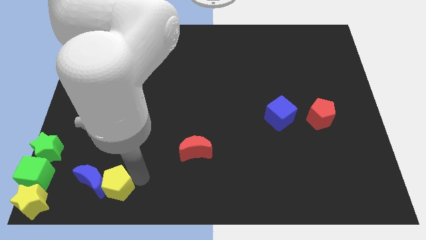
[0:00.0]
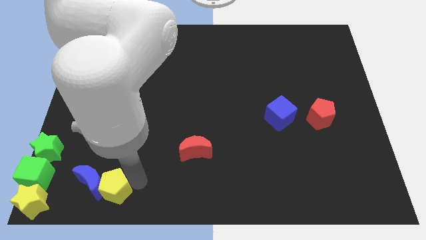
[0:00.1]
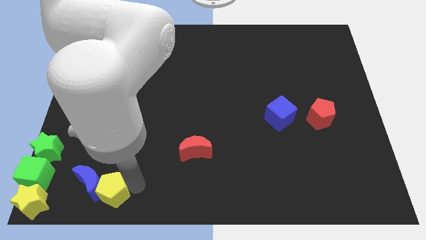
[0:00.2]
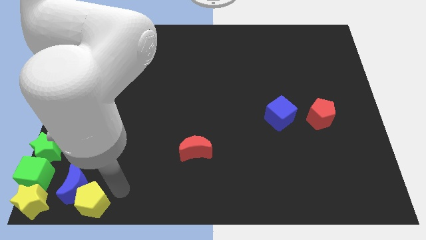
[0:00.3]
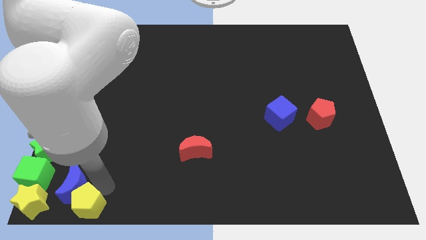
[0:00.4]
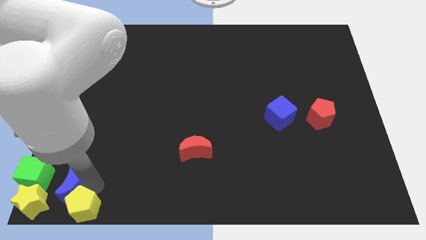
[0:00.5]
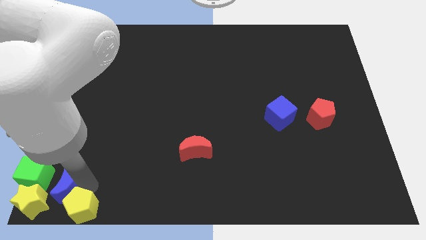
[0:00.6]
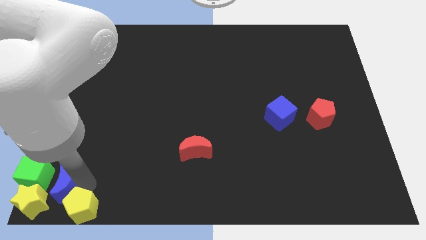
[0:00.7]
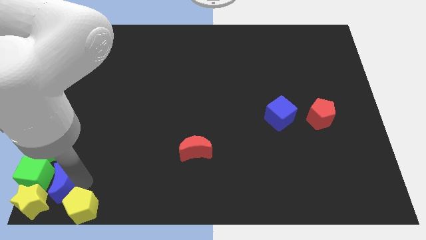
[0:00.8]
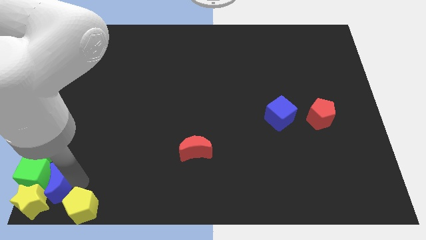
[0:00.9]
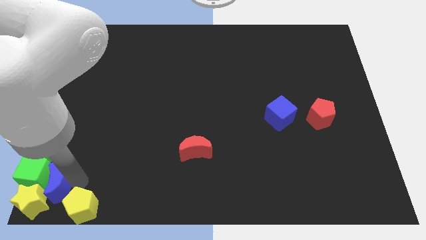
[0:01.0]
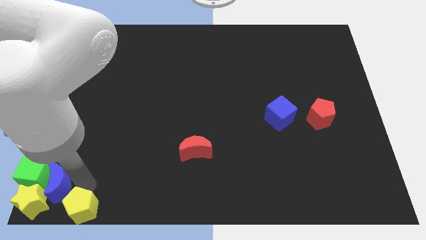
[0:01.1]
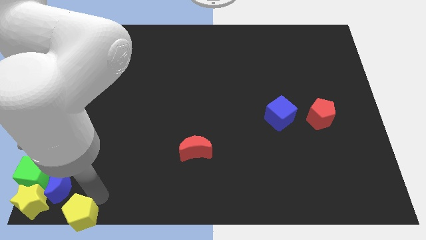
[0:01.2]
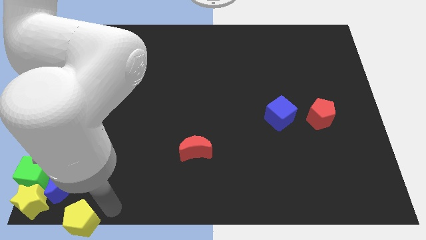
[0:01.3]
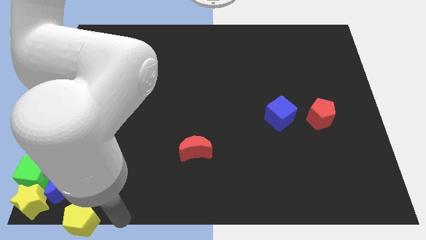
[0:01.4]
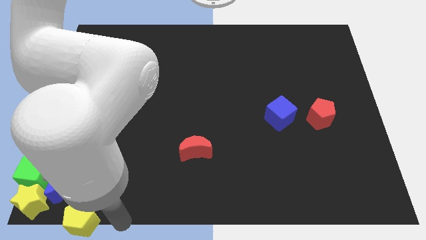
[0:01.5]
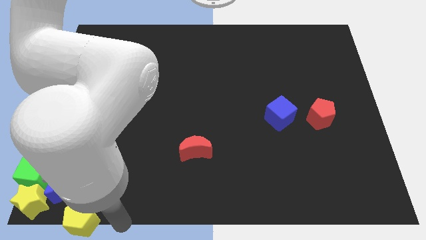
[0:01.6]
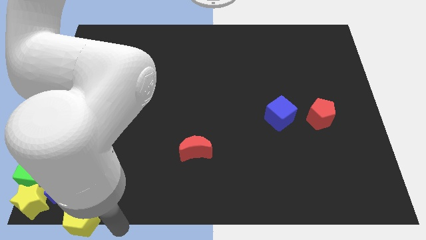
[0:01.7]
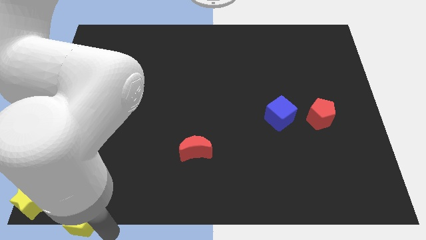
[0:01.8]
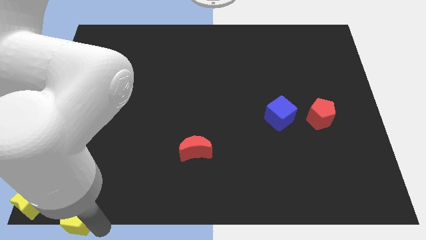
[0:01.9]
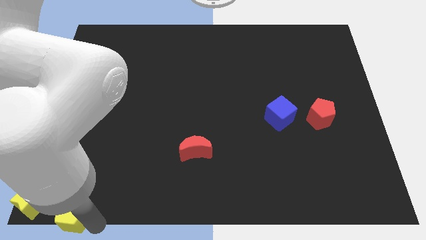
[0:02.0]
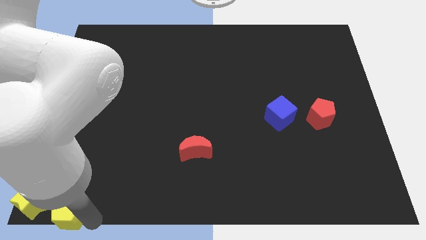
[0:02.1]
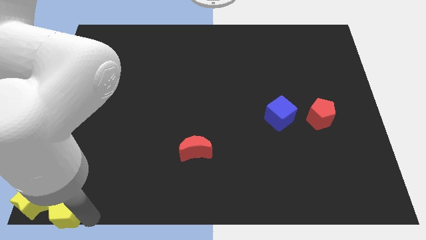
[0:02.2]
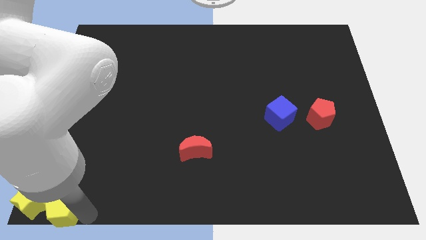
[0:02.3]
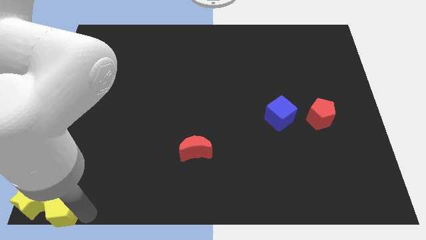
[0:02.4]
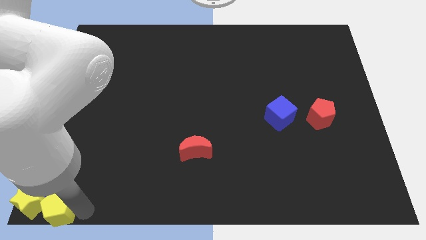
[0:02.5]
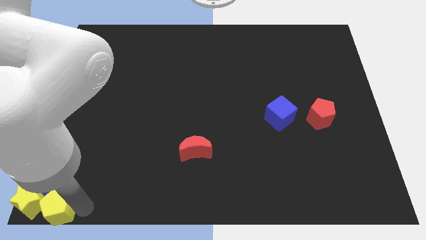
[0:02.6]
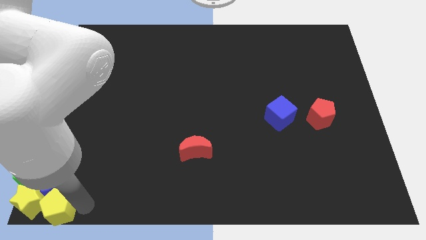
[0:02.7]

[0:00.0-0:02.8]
push the blue moon slightly left along with the yellow pentagon

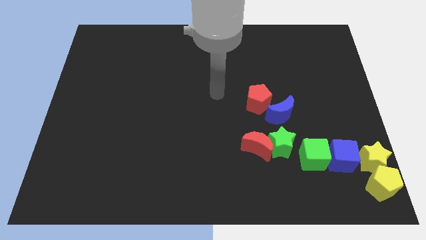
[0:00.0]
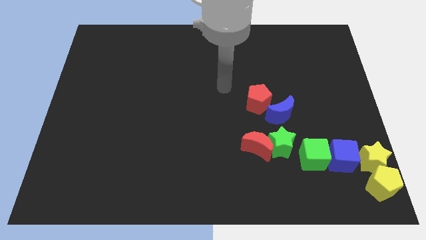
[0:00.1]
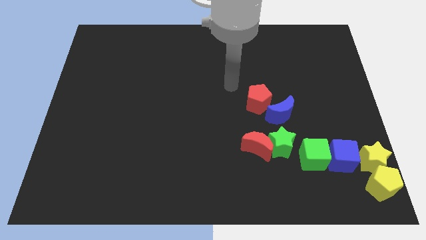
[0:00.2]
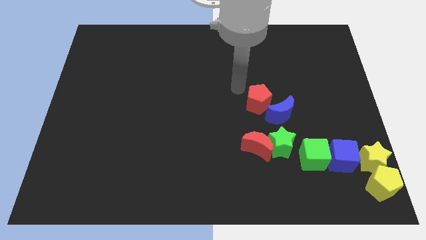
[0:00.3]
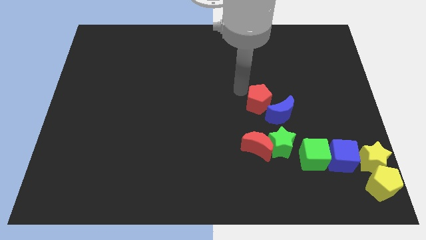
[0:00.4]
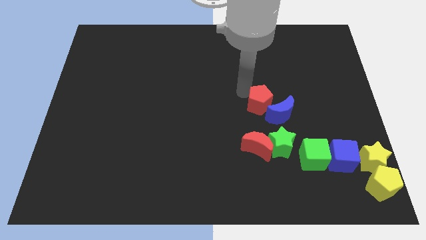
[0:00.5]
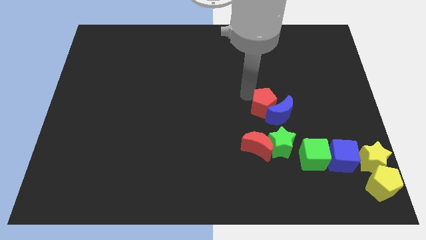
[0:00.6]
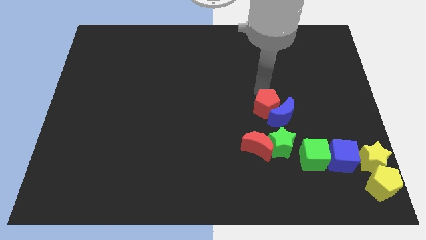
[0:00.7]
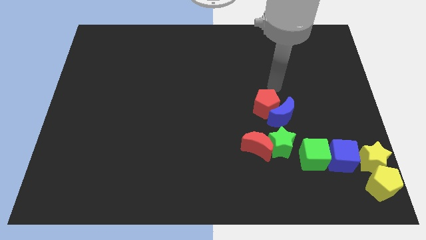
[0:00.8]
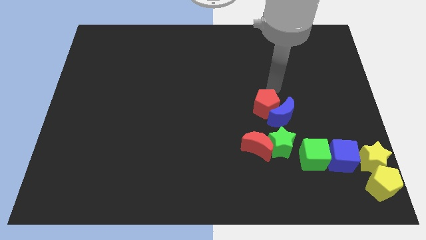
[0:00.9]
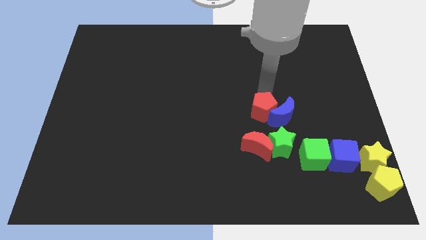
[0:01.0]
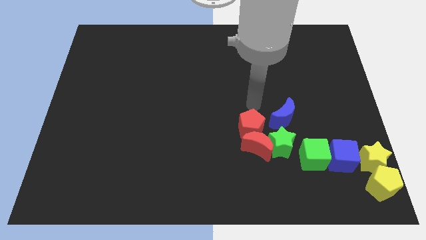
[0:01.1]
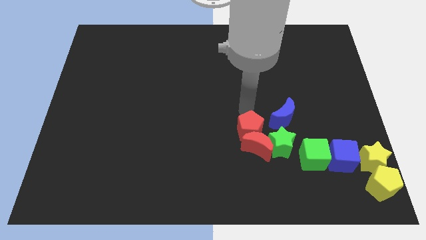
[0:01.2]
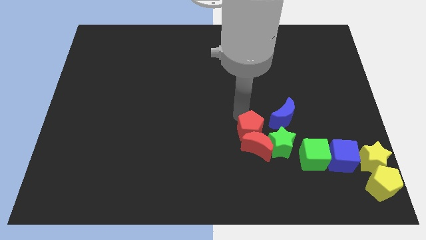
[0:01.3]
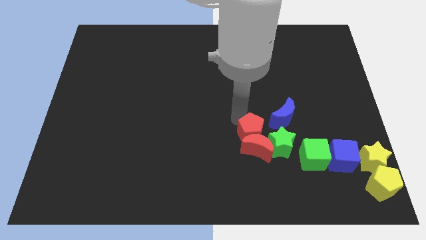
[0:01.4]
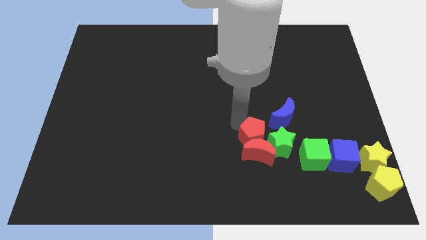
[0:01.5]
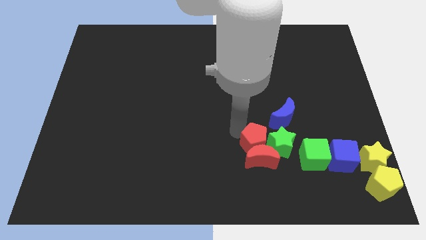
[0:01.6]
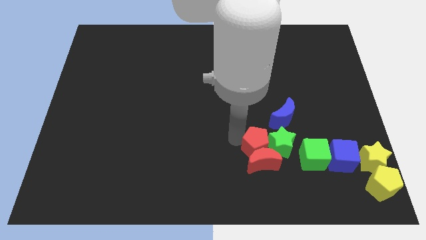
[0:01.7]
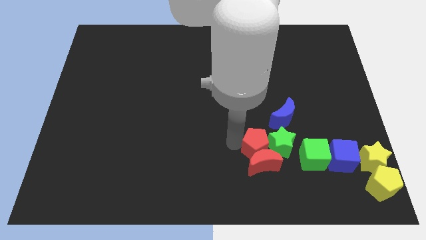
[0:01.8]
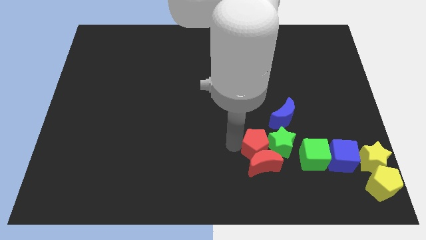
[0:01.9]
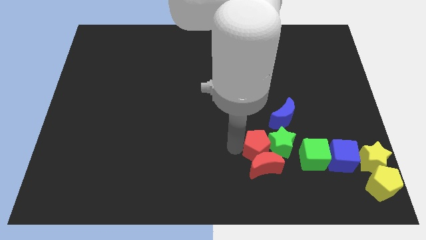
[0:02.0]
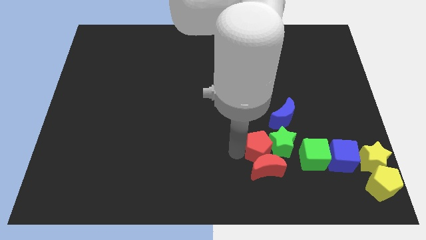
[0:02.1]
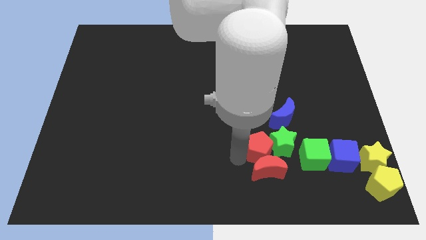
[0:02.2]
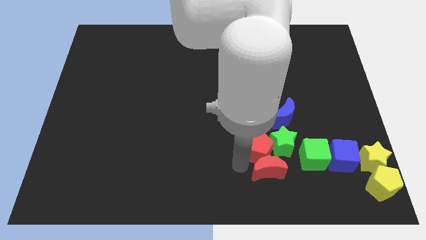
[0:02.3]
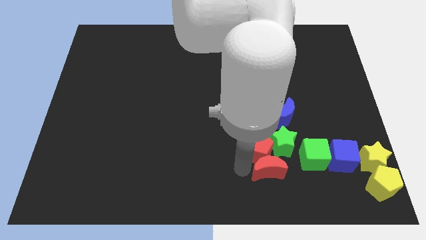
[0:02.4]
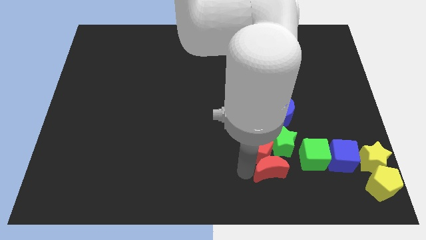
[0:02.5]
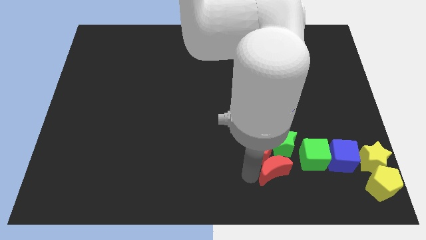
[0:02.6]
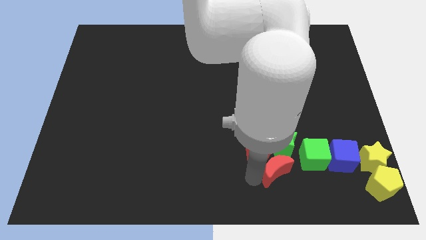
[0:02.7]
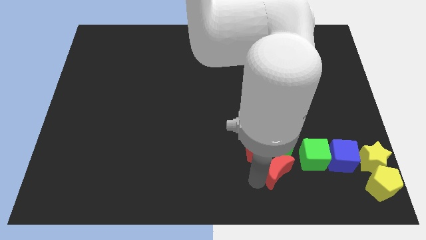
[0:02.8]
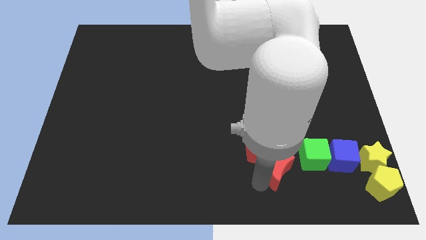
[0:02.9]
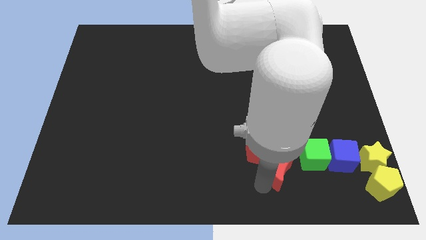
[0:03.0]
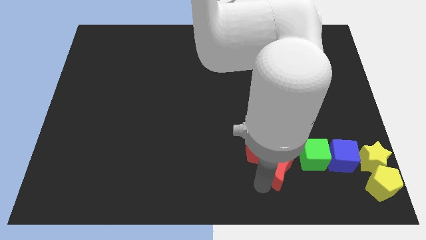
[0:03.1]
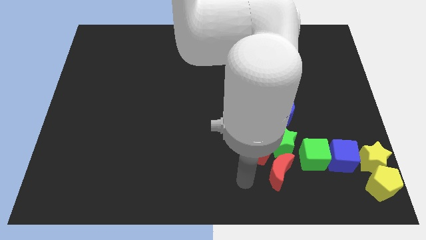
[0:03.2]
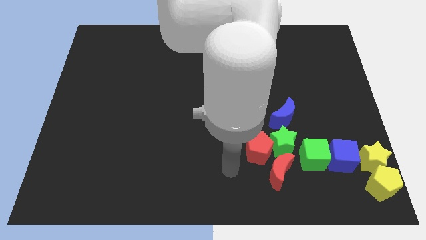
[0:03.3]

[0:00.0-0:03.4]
push the red pentagon to the left of the green star along with the red crescent placing below the green star

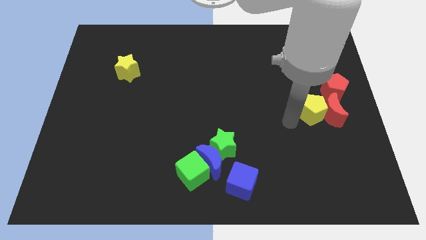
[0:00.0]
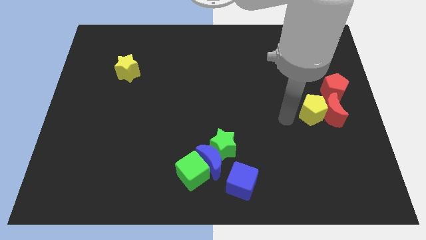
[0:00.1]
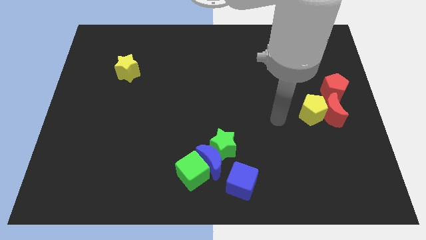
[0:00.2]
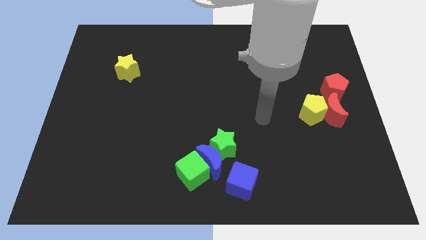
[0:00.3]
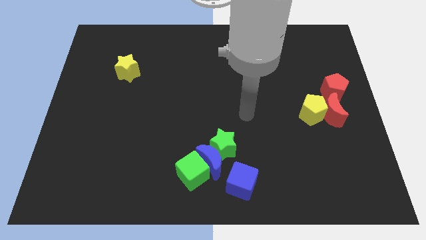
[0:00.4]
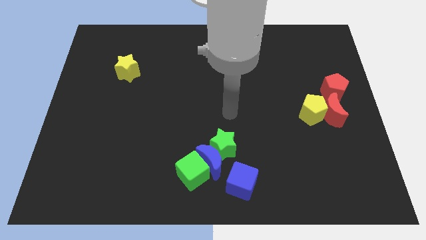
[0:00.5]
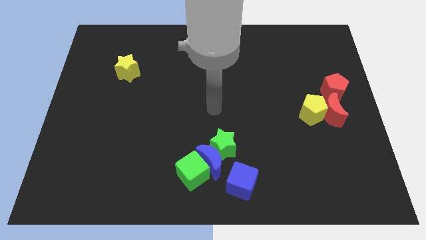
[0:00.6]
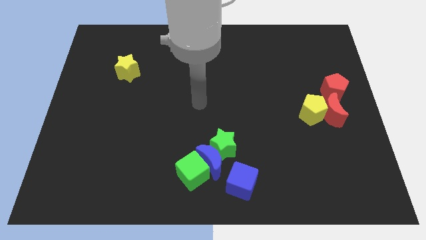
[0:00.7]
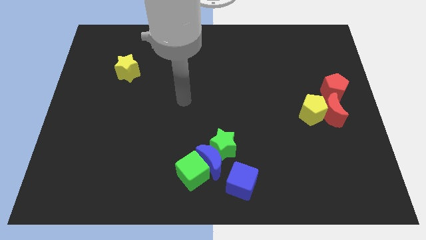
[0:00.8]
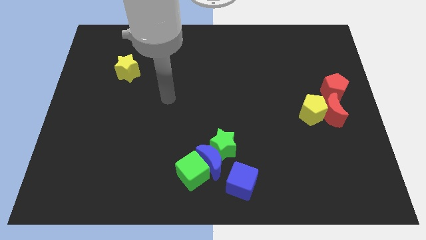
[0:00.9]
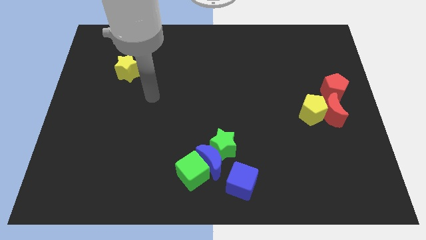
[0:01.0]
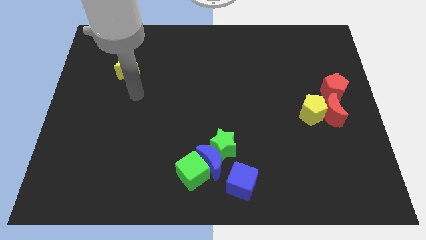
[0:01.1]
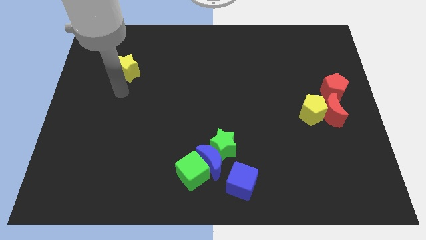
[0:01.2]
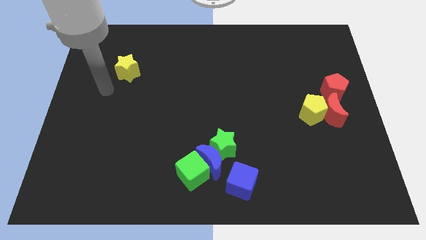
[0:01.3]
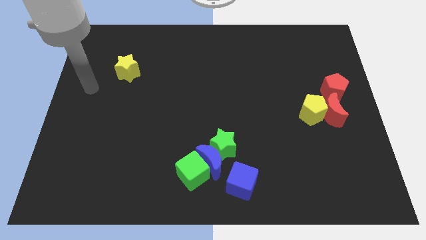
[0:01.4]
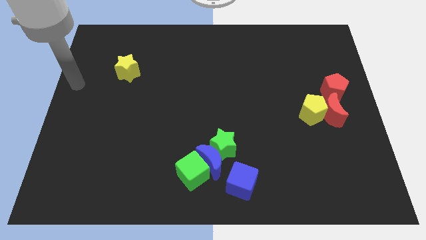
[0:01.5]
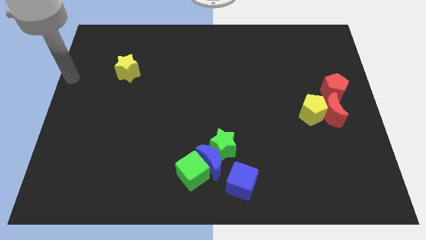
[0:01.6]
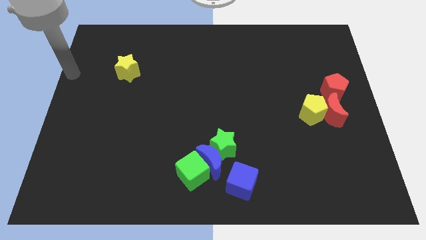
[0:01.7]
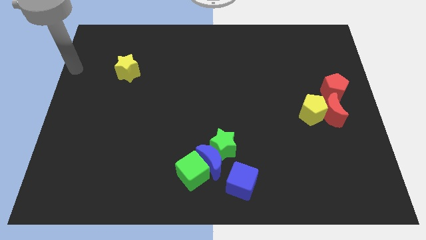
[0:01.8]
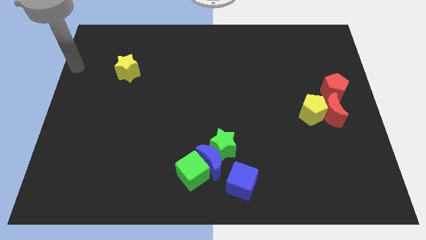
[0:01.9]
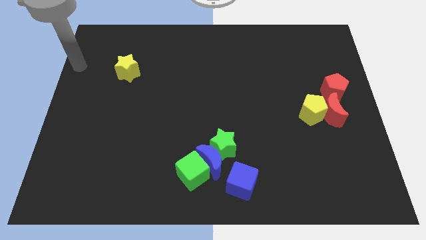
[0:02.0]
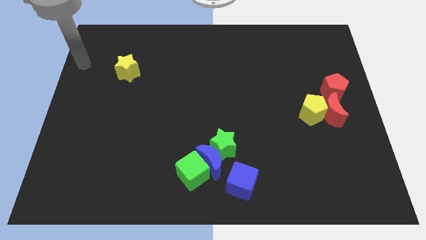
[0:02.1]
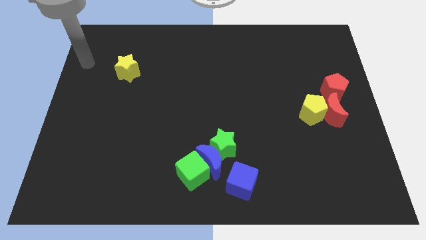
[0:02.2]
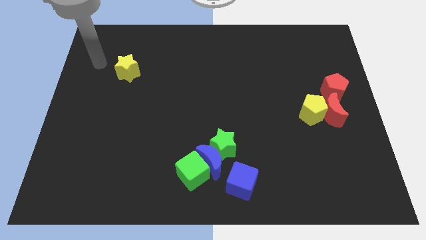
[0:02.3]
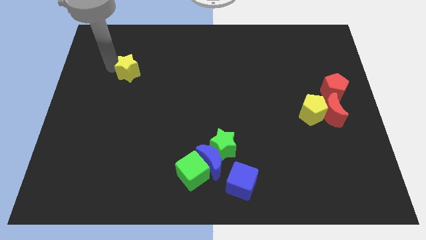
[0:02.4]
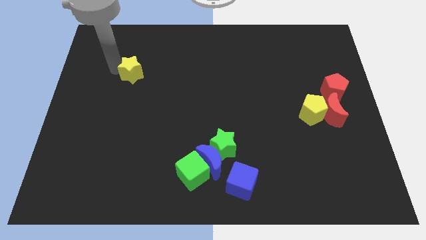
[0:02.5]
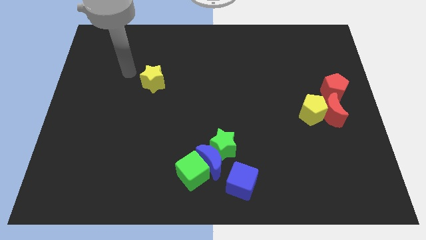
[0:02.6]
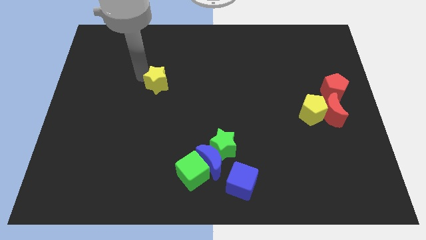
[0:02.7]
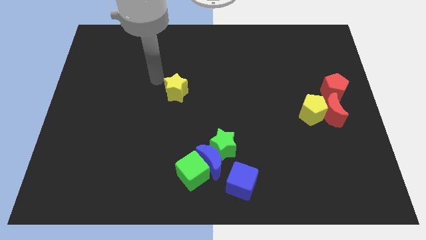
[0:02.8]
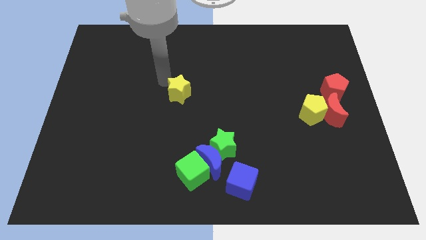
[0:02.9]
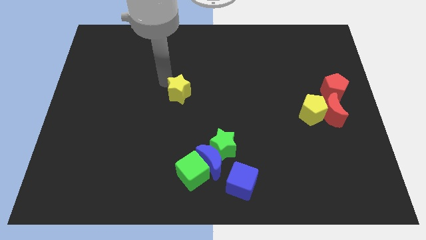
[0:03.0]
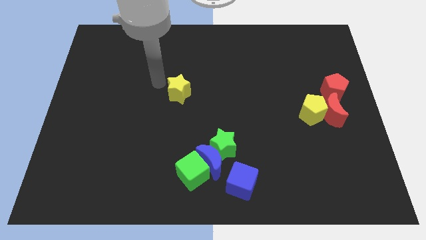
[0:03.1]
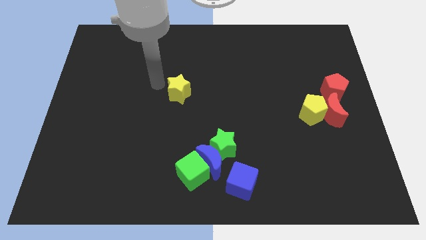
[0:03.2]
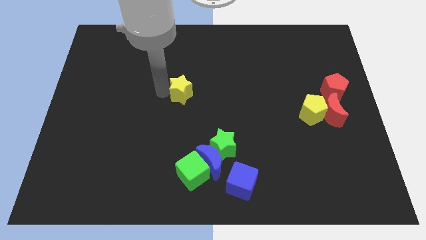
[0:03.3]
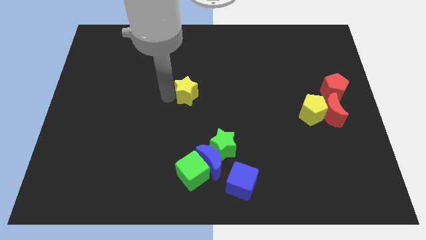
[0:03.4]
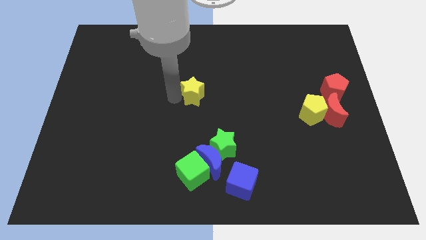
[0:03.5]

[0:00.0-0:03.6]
push the yellow star to the top left of the green star
